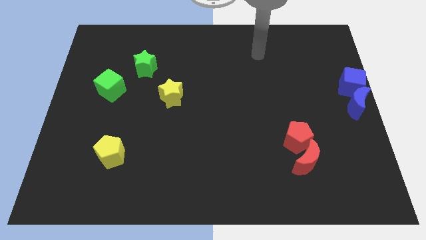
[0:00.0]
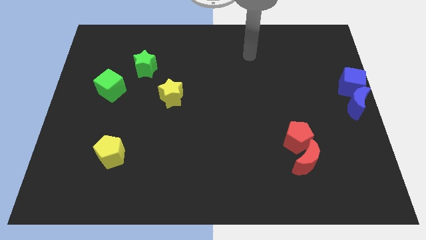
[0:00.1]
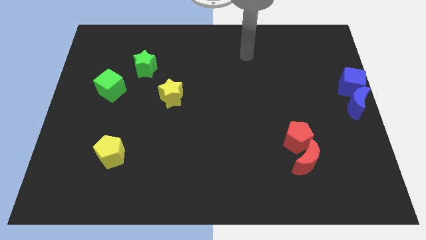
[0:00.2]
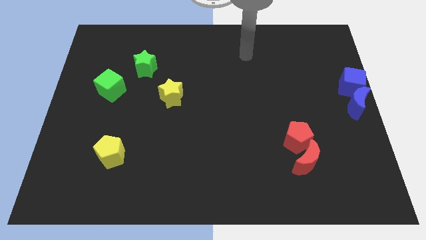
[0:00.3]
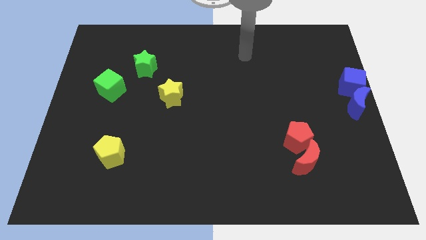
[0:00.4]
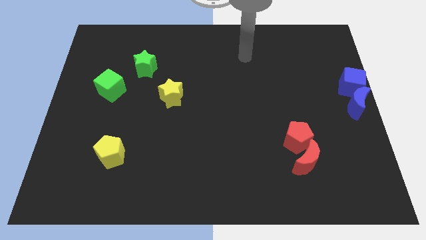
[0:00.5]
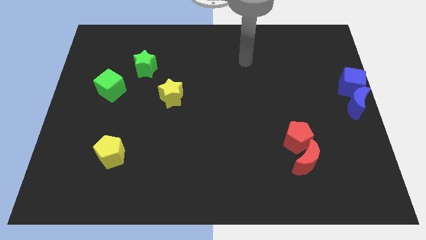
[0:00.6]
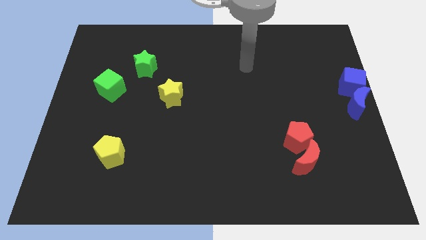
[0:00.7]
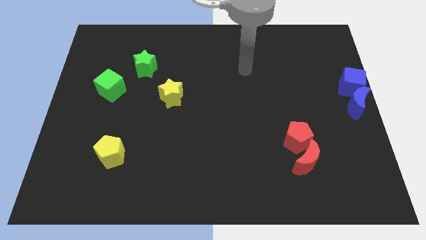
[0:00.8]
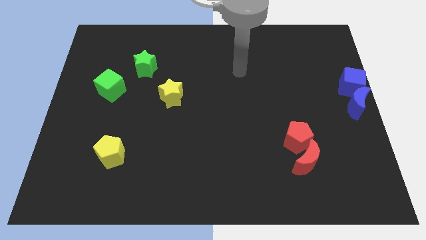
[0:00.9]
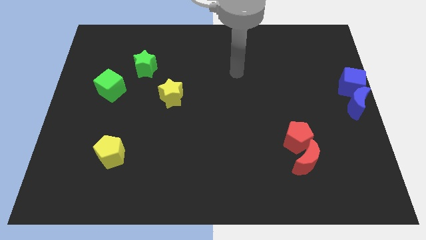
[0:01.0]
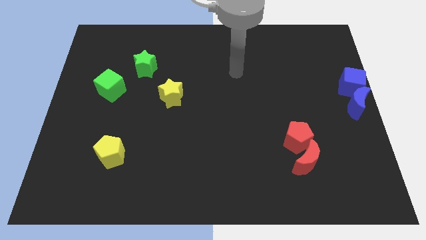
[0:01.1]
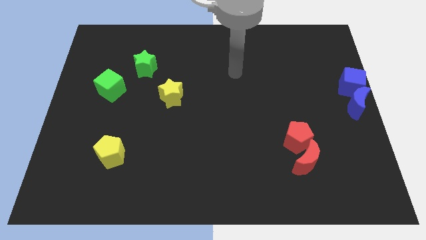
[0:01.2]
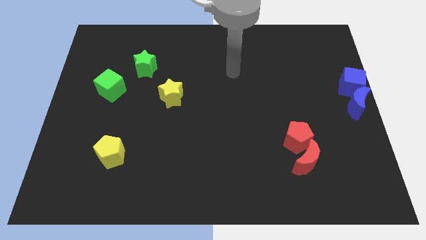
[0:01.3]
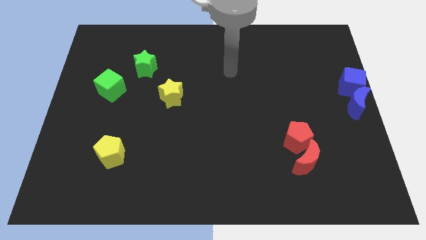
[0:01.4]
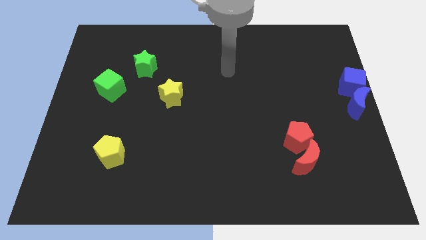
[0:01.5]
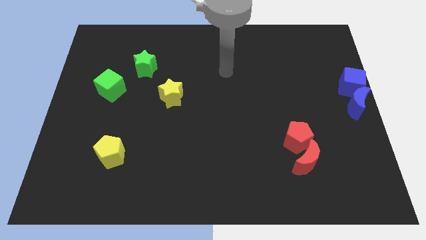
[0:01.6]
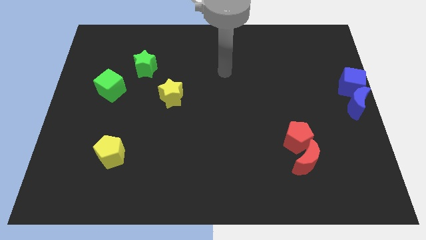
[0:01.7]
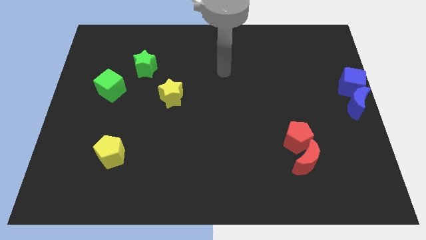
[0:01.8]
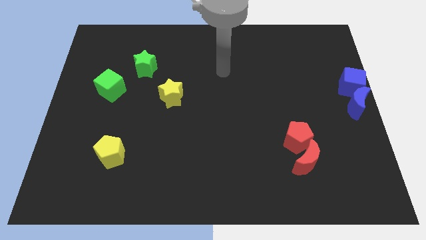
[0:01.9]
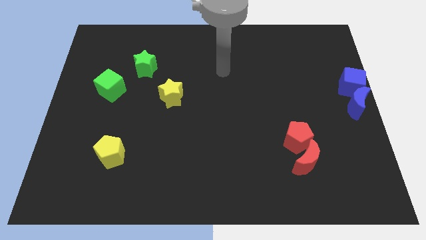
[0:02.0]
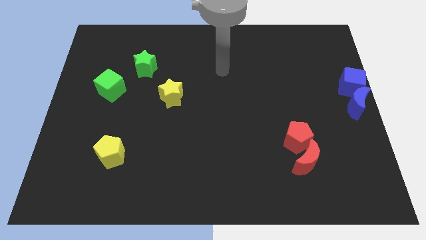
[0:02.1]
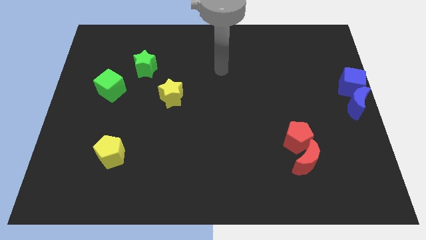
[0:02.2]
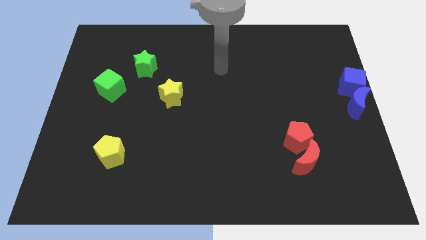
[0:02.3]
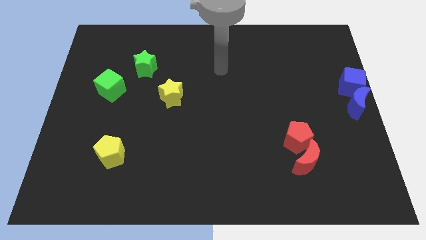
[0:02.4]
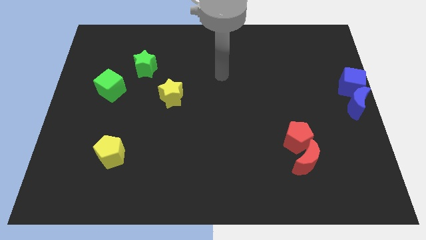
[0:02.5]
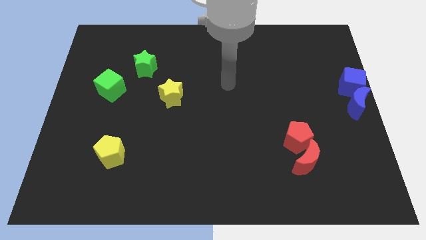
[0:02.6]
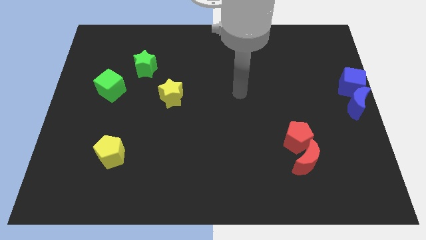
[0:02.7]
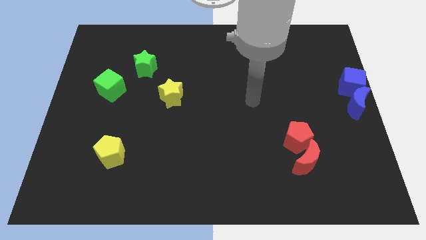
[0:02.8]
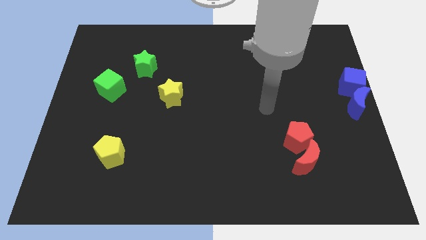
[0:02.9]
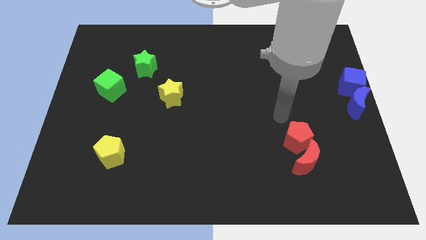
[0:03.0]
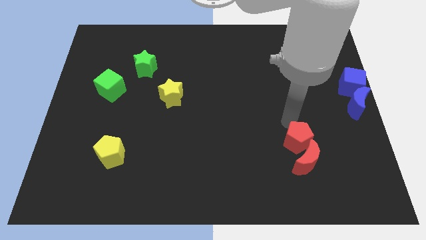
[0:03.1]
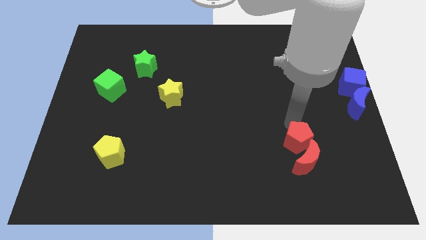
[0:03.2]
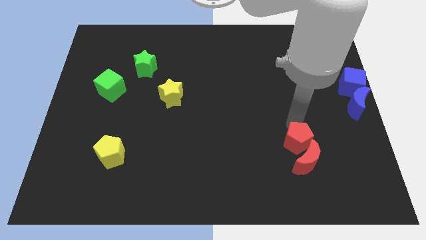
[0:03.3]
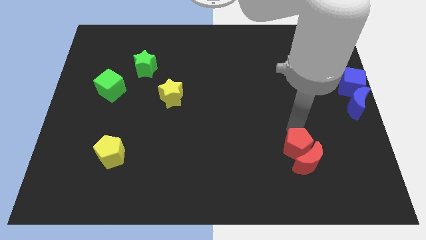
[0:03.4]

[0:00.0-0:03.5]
touch the top side of the red pentagon

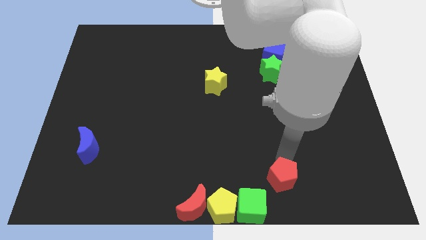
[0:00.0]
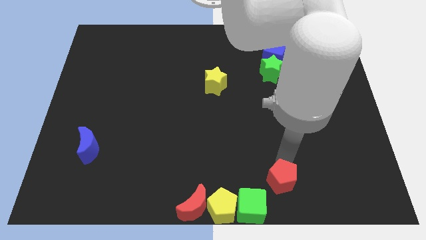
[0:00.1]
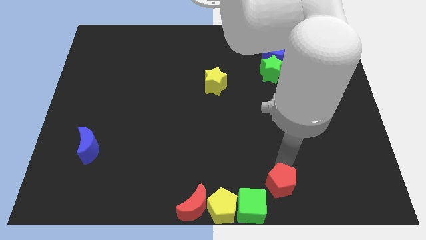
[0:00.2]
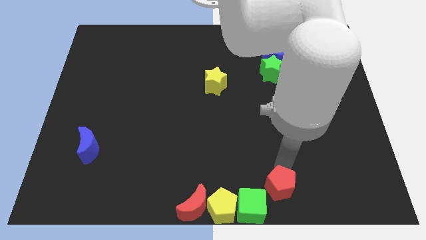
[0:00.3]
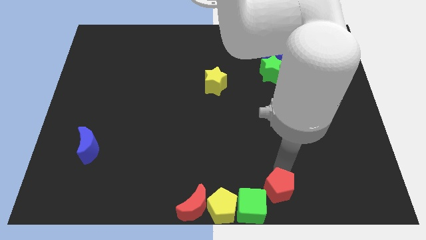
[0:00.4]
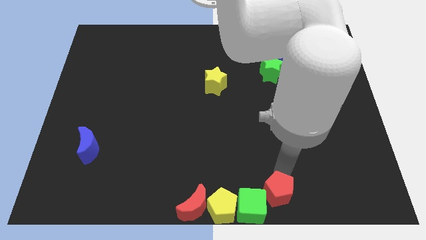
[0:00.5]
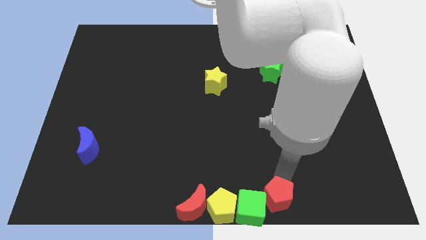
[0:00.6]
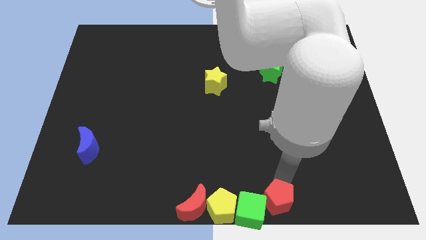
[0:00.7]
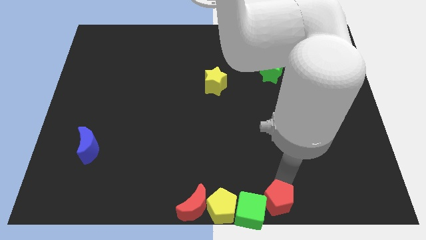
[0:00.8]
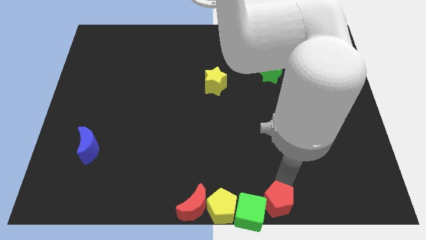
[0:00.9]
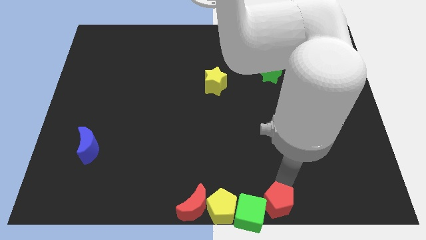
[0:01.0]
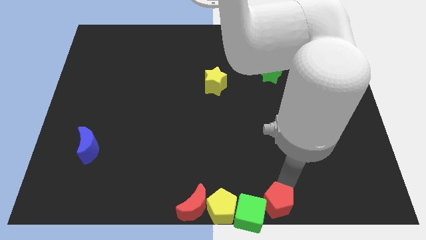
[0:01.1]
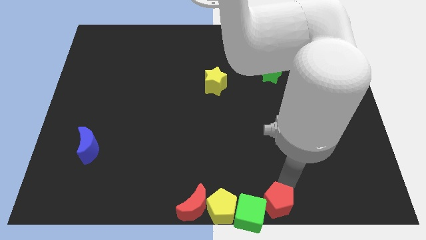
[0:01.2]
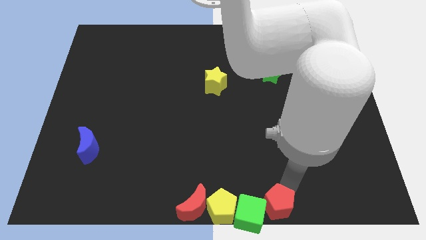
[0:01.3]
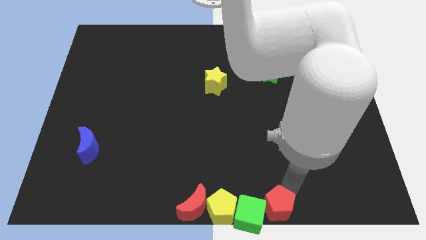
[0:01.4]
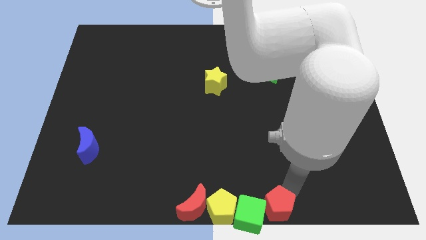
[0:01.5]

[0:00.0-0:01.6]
push red pentagon into the green cube

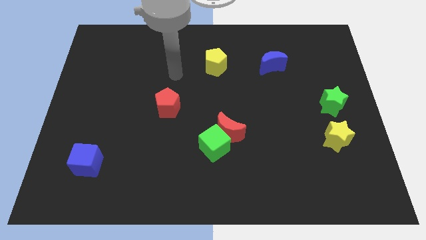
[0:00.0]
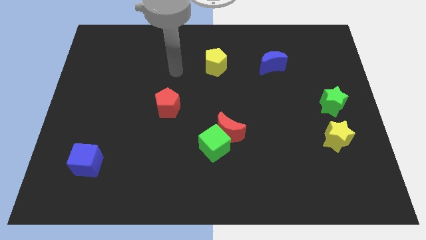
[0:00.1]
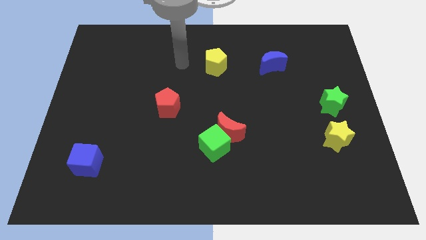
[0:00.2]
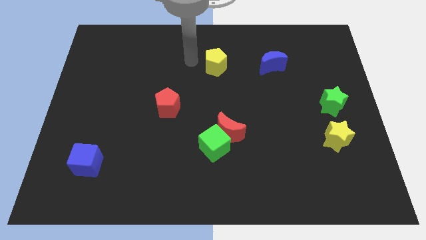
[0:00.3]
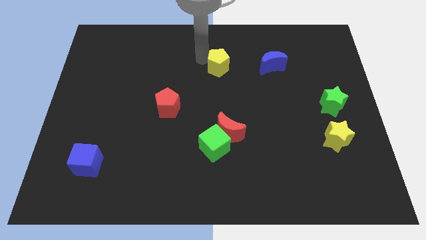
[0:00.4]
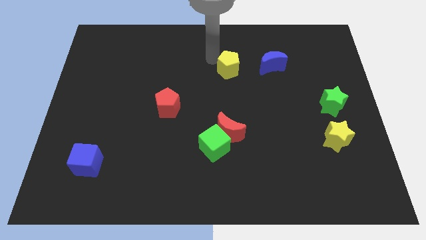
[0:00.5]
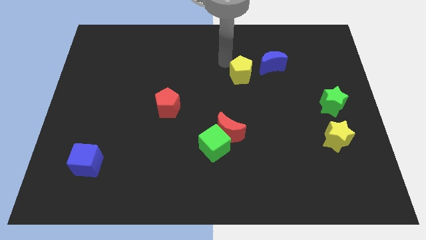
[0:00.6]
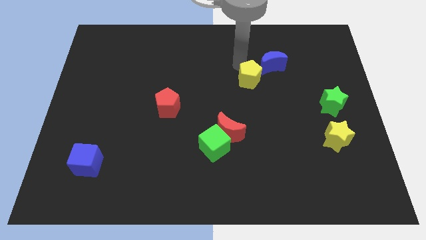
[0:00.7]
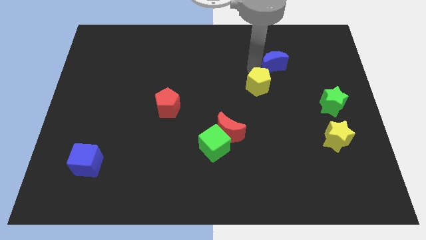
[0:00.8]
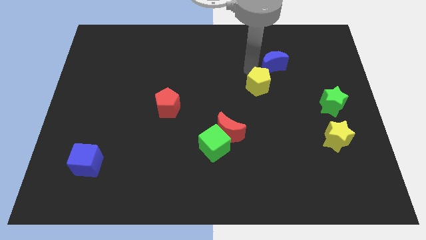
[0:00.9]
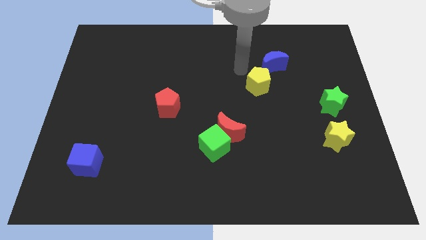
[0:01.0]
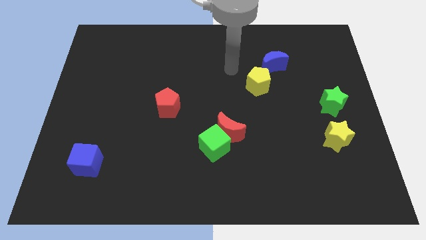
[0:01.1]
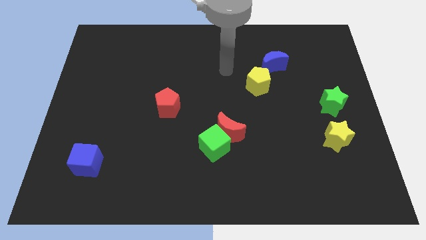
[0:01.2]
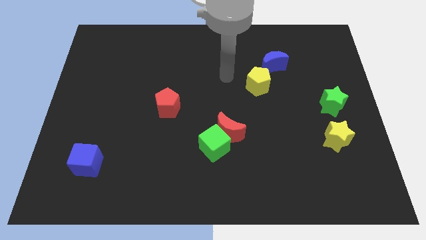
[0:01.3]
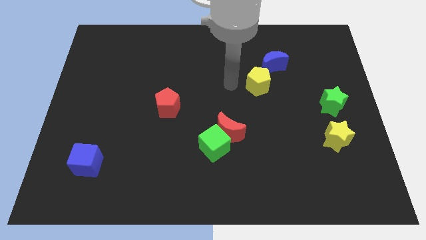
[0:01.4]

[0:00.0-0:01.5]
slide the yellow pentagon diagonally top right to the red moon

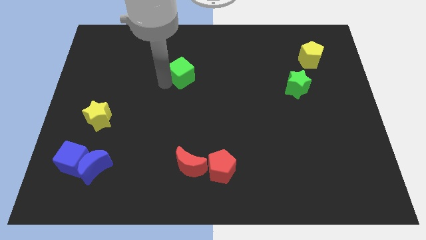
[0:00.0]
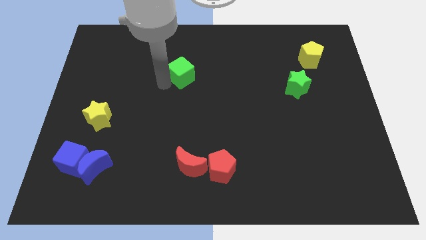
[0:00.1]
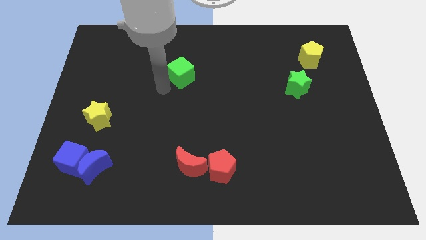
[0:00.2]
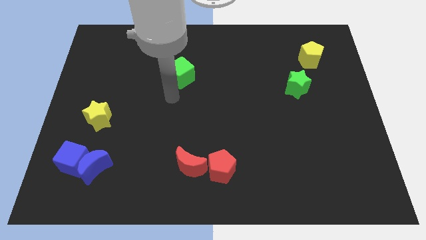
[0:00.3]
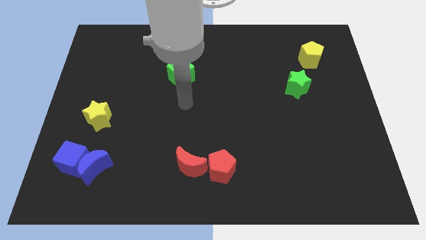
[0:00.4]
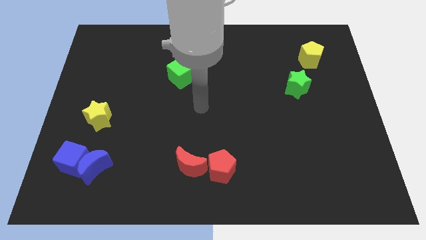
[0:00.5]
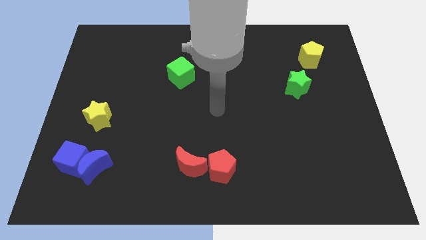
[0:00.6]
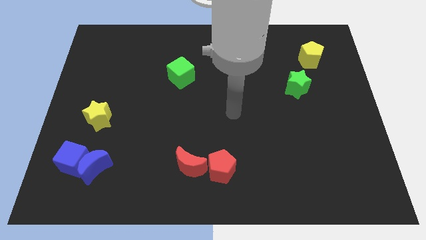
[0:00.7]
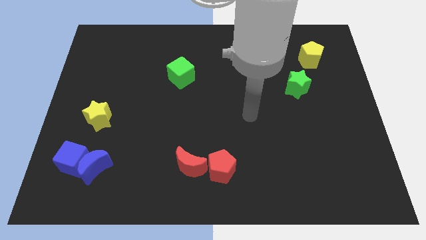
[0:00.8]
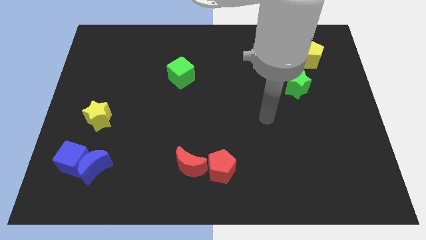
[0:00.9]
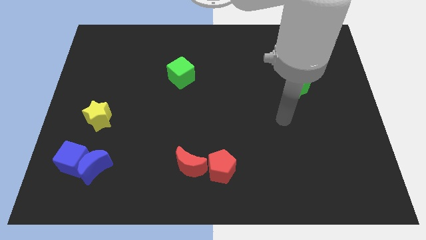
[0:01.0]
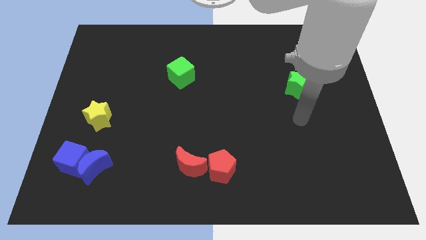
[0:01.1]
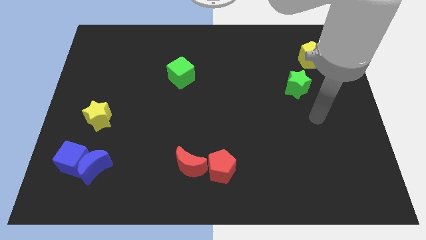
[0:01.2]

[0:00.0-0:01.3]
move your arm away from the green cube

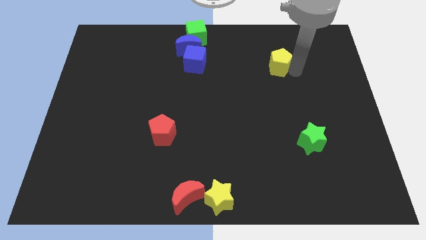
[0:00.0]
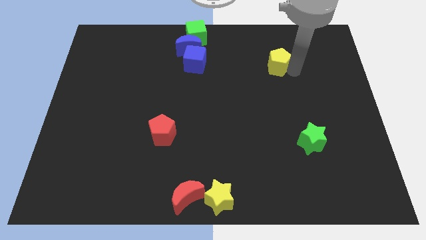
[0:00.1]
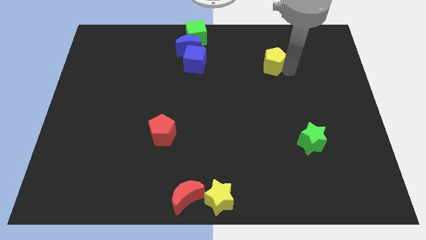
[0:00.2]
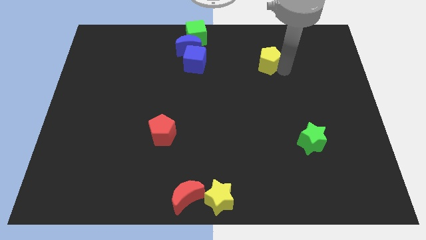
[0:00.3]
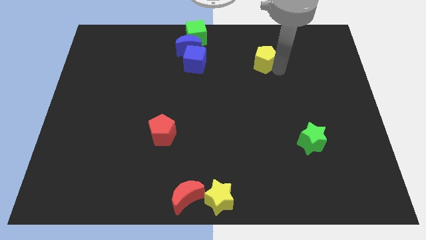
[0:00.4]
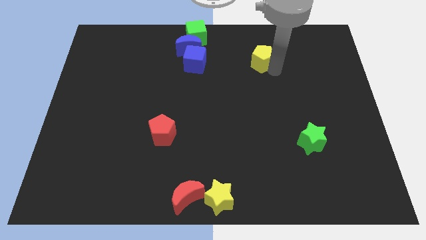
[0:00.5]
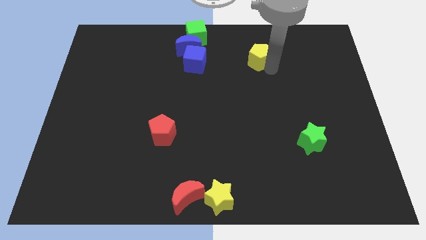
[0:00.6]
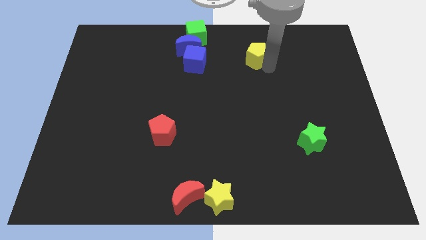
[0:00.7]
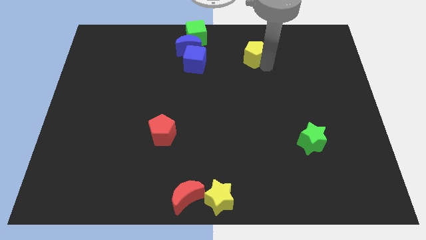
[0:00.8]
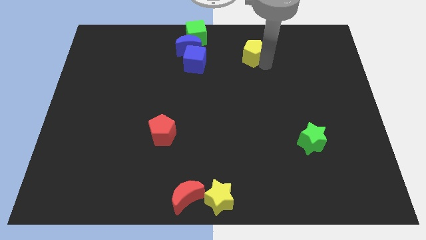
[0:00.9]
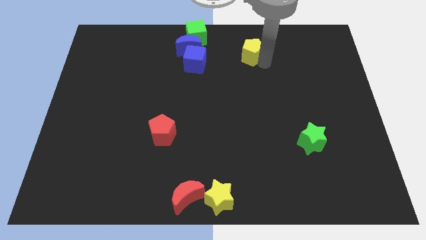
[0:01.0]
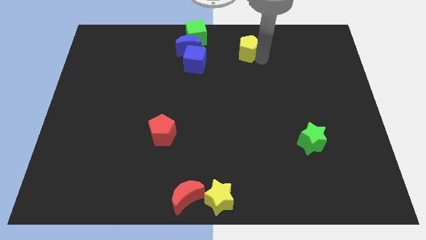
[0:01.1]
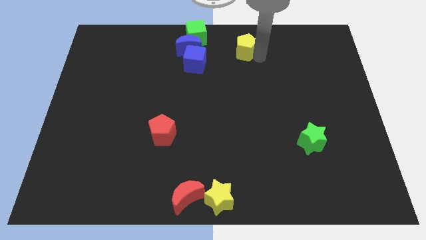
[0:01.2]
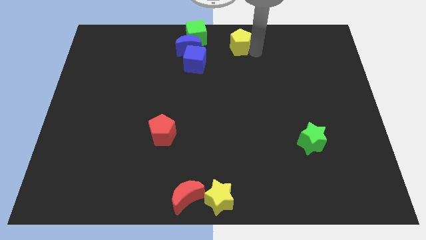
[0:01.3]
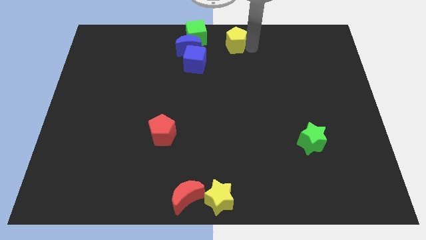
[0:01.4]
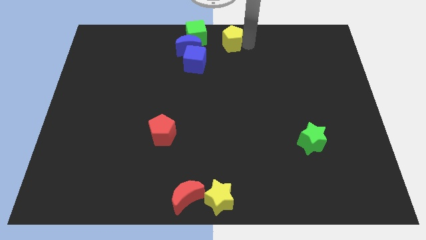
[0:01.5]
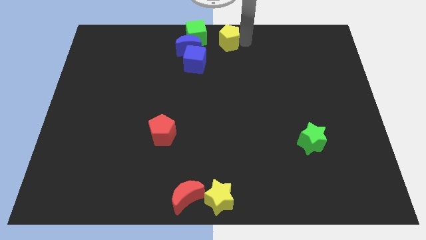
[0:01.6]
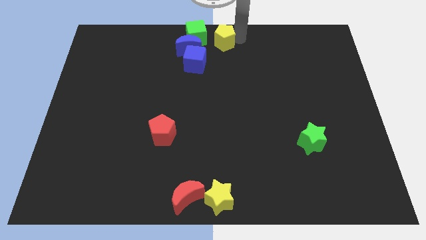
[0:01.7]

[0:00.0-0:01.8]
move the yellow pentagon into the right side of the green cube
